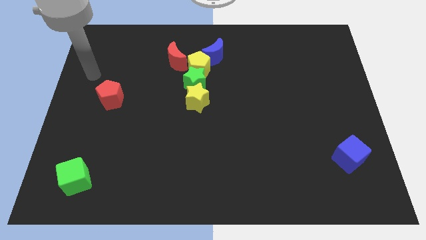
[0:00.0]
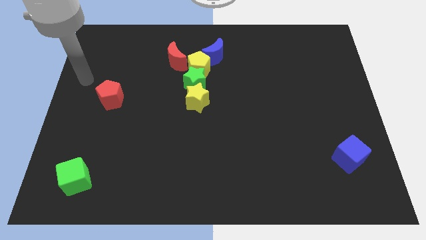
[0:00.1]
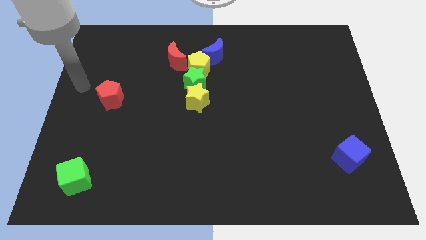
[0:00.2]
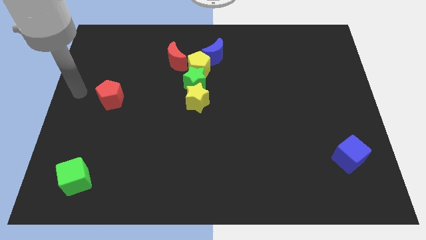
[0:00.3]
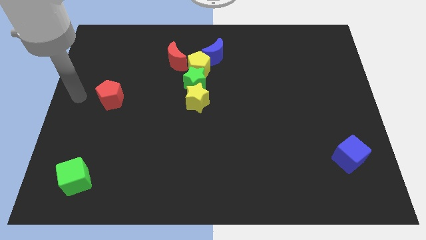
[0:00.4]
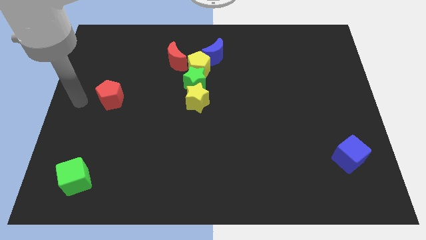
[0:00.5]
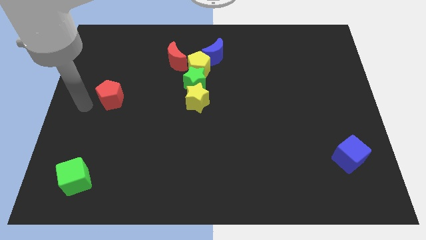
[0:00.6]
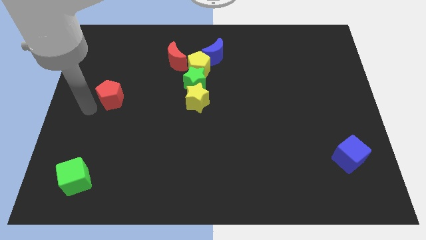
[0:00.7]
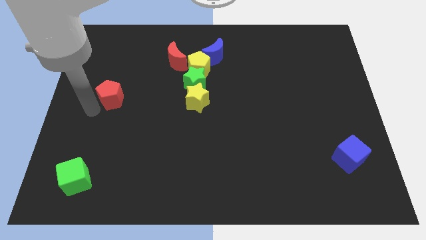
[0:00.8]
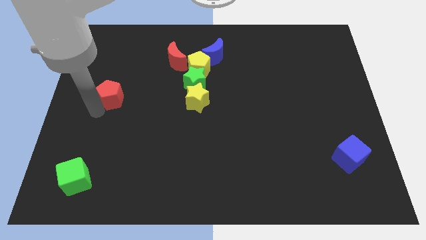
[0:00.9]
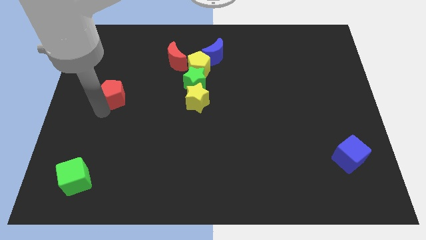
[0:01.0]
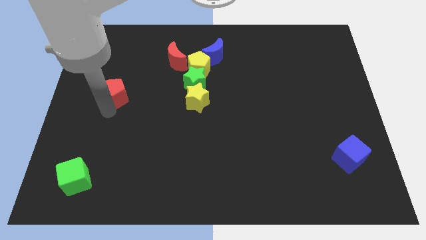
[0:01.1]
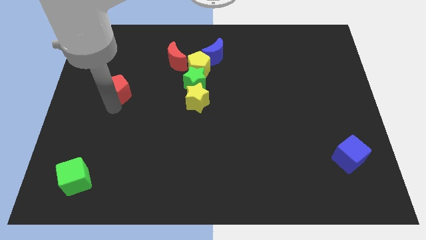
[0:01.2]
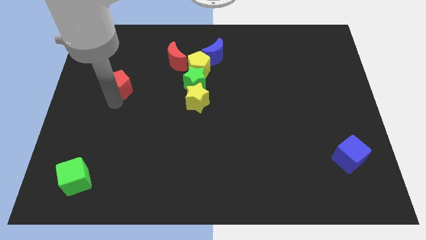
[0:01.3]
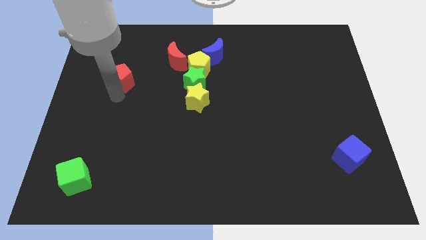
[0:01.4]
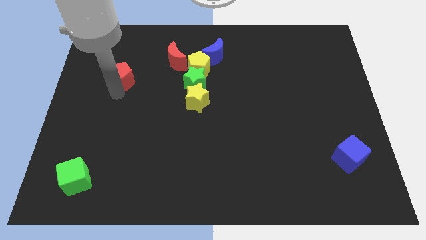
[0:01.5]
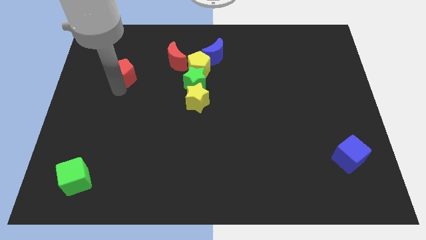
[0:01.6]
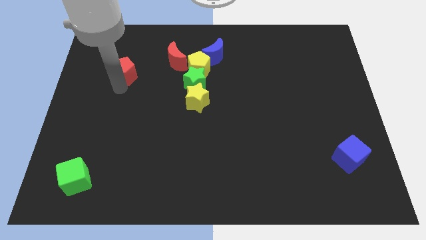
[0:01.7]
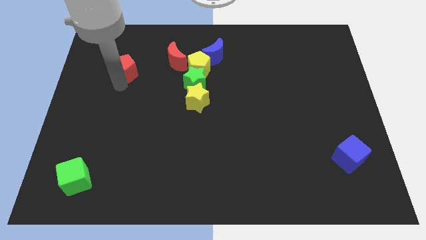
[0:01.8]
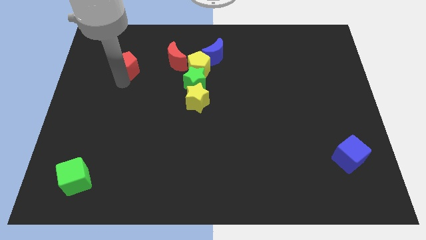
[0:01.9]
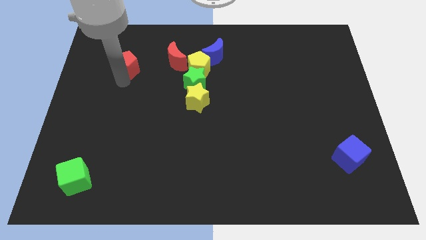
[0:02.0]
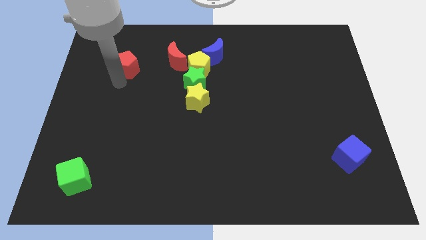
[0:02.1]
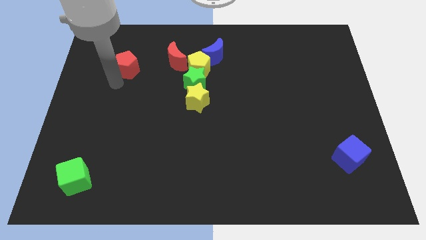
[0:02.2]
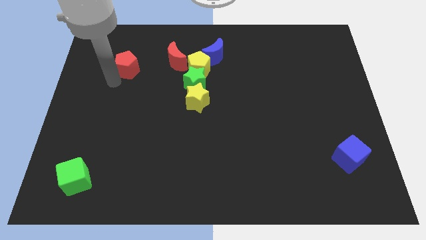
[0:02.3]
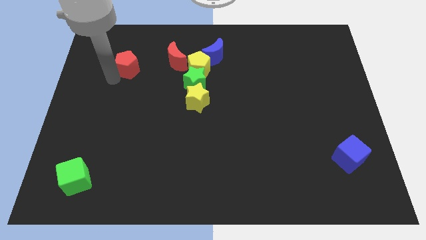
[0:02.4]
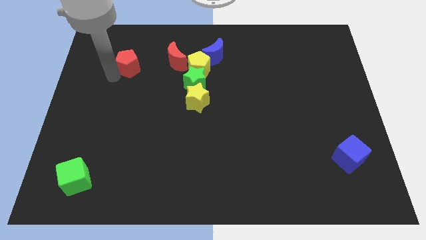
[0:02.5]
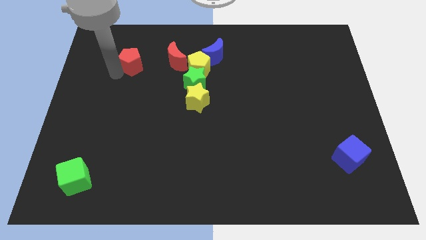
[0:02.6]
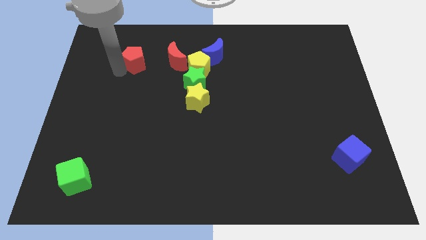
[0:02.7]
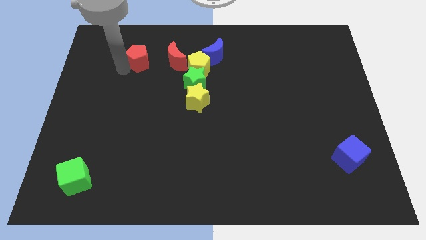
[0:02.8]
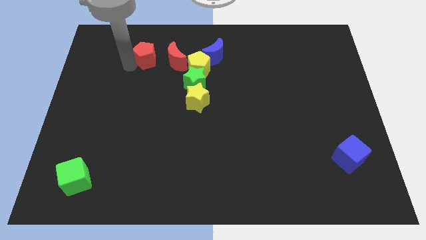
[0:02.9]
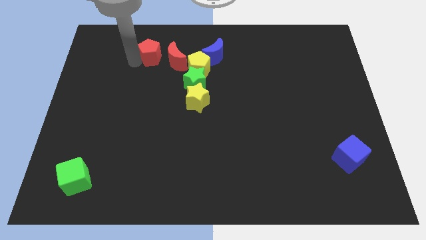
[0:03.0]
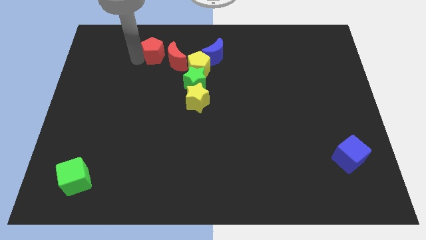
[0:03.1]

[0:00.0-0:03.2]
push red pentagon towards red crescent

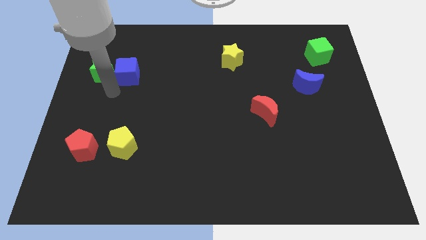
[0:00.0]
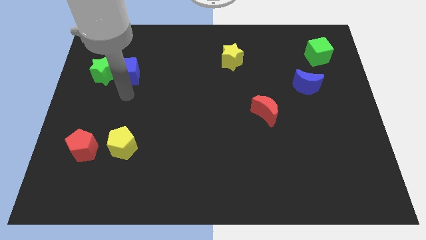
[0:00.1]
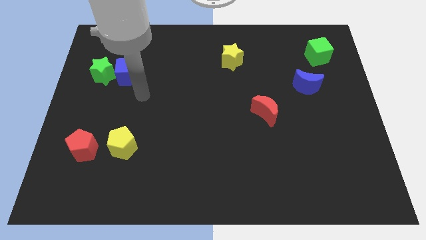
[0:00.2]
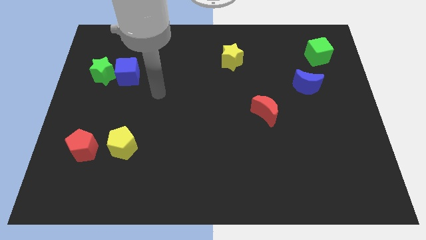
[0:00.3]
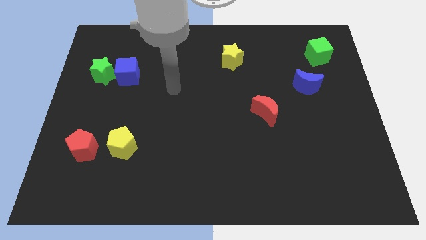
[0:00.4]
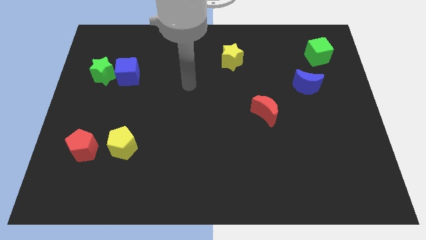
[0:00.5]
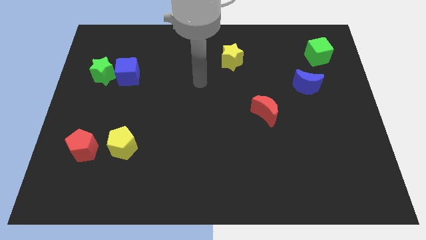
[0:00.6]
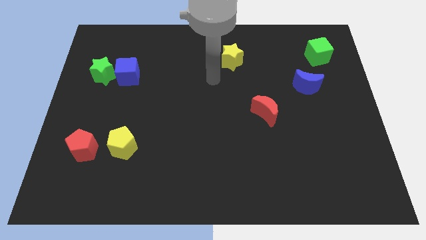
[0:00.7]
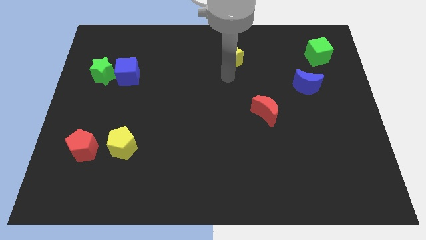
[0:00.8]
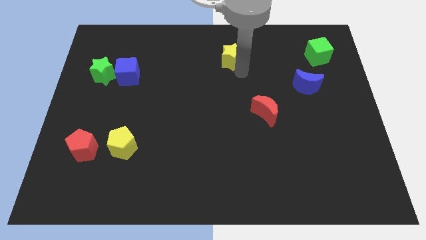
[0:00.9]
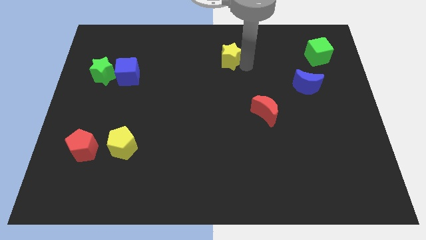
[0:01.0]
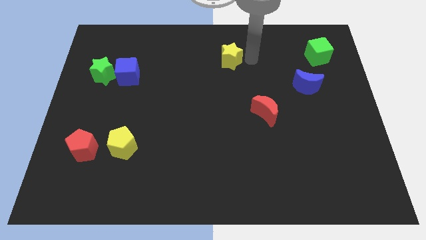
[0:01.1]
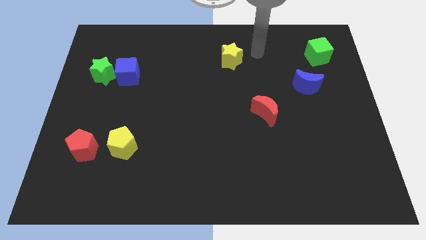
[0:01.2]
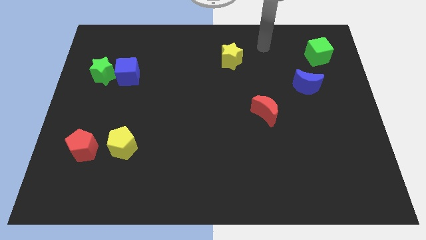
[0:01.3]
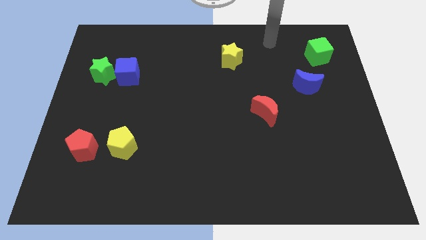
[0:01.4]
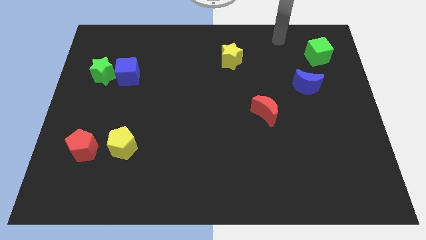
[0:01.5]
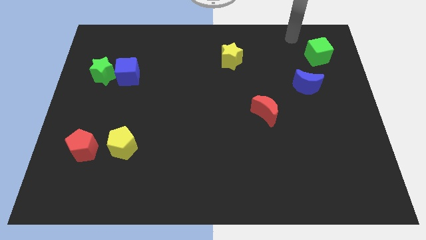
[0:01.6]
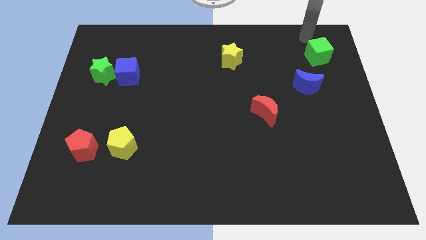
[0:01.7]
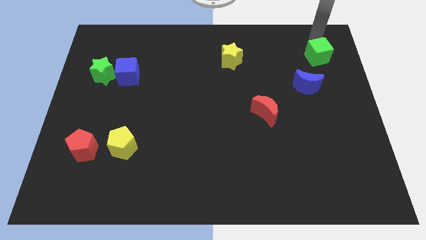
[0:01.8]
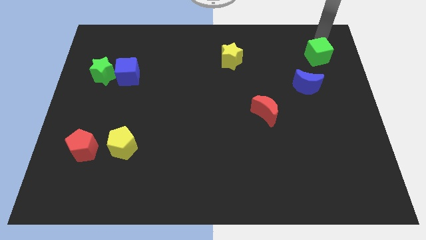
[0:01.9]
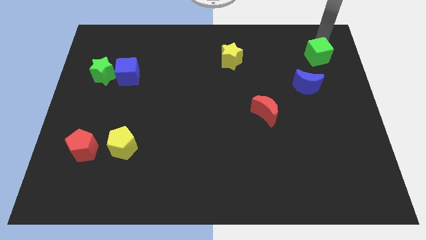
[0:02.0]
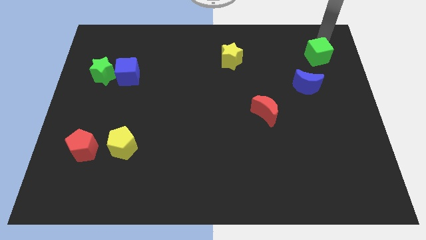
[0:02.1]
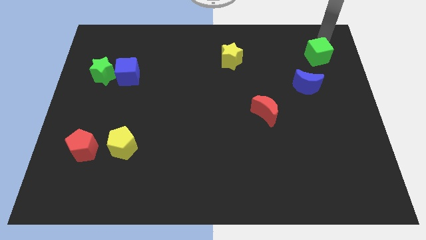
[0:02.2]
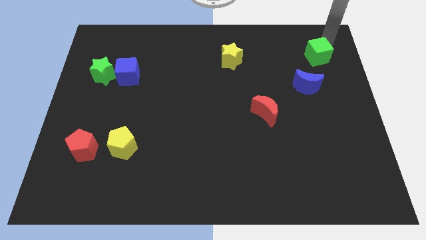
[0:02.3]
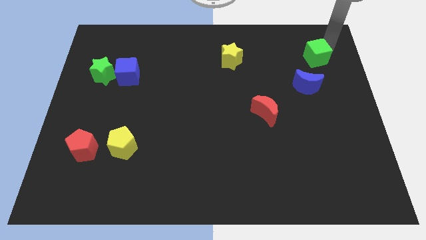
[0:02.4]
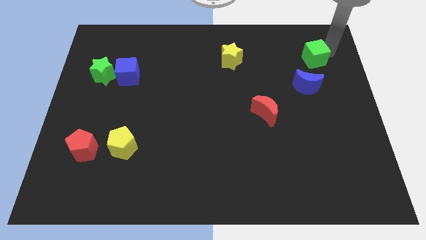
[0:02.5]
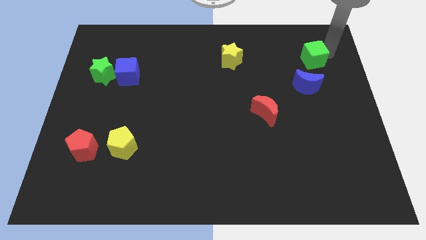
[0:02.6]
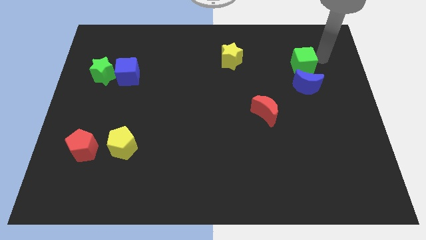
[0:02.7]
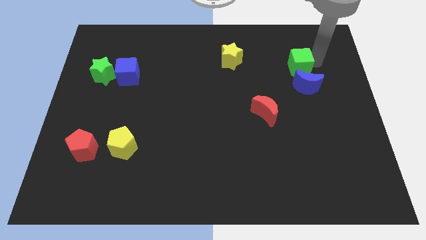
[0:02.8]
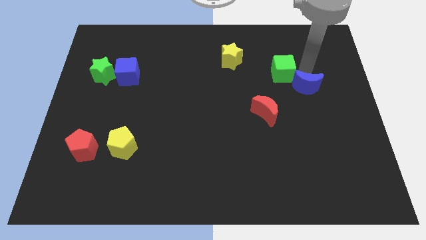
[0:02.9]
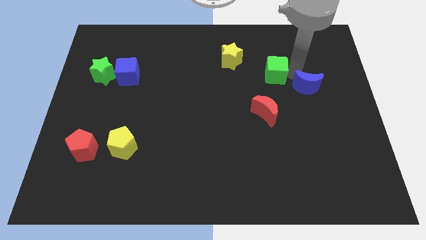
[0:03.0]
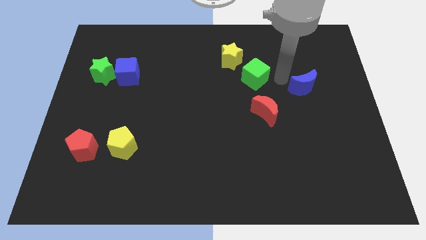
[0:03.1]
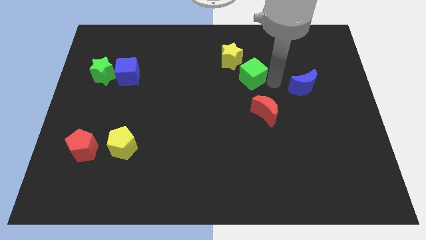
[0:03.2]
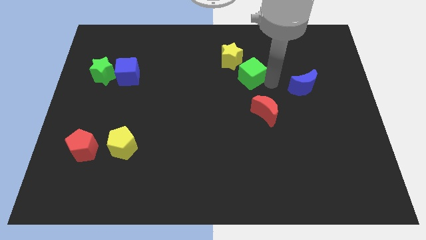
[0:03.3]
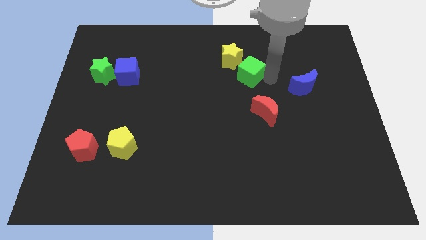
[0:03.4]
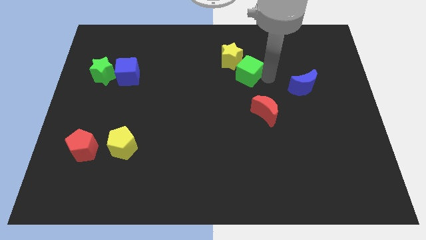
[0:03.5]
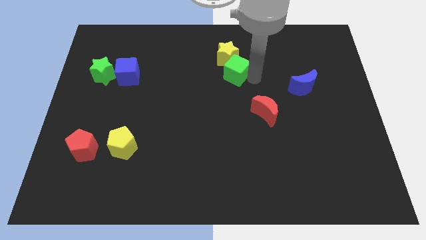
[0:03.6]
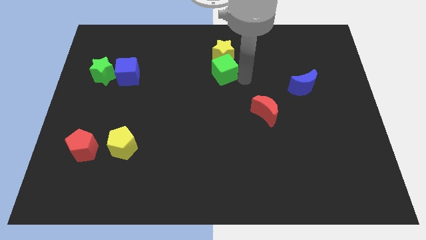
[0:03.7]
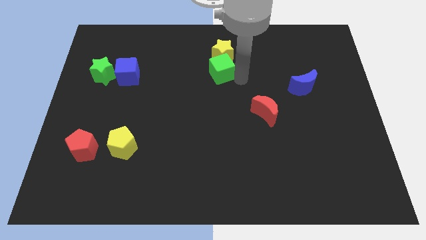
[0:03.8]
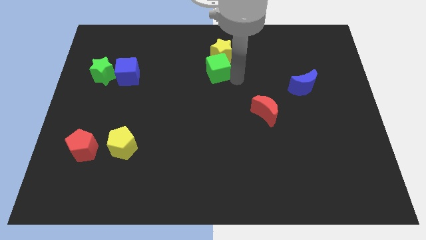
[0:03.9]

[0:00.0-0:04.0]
move the green square down to the yellow star

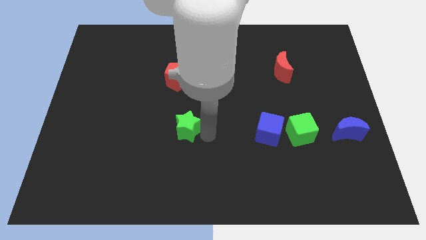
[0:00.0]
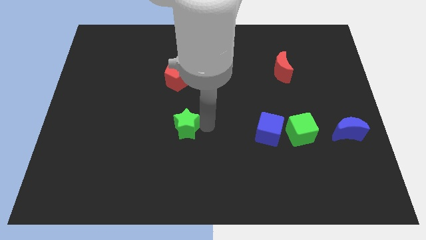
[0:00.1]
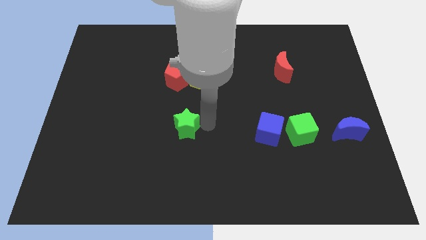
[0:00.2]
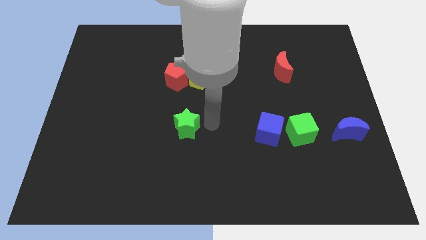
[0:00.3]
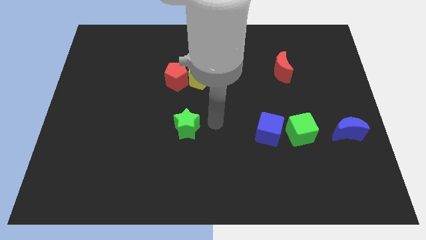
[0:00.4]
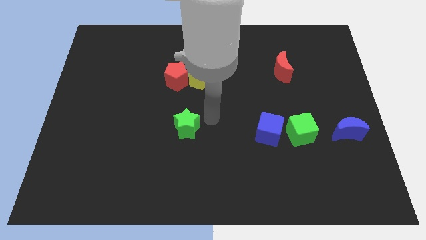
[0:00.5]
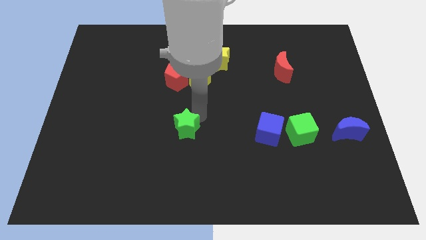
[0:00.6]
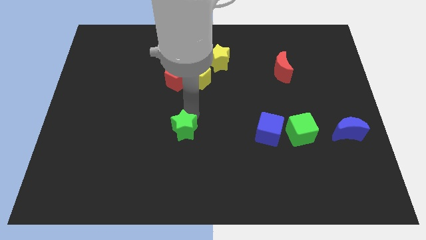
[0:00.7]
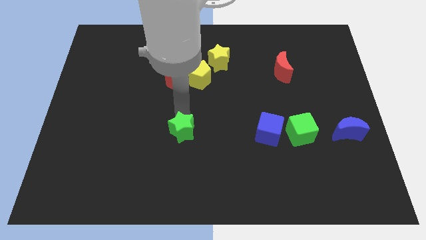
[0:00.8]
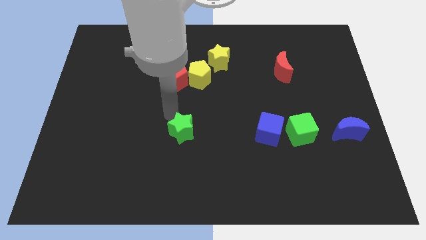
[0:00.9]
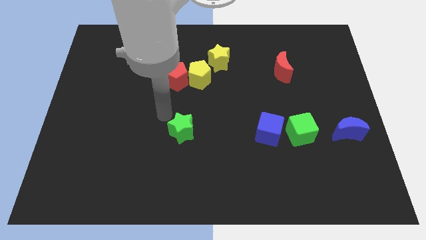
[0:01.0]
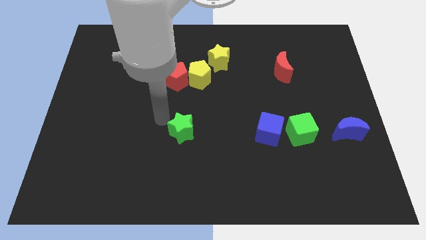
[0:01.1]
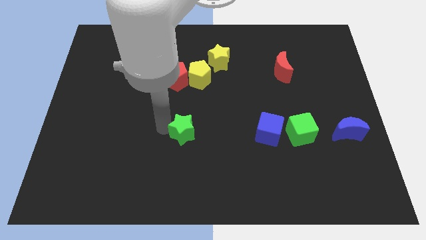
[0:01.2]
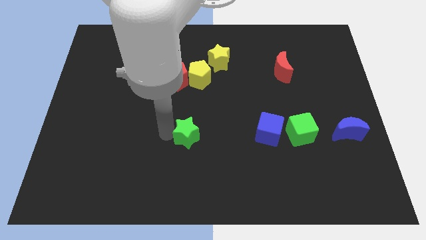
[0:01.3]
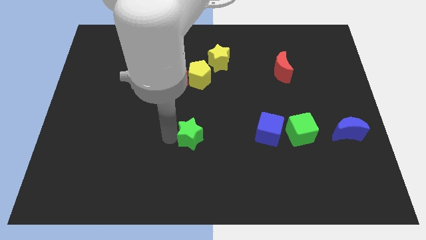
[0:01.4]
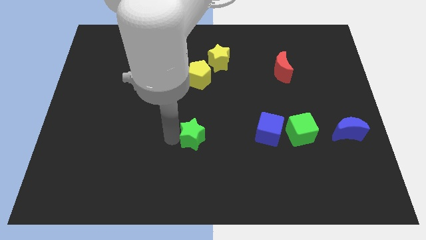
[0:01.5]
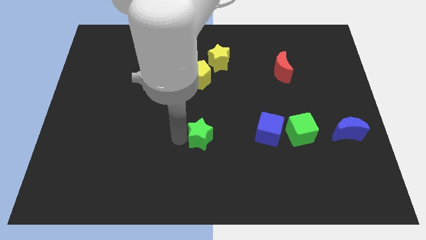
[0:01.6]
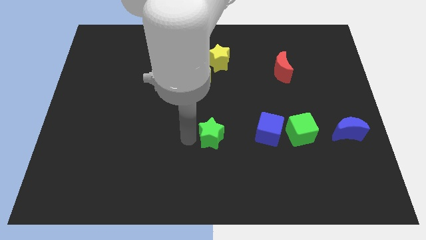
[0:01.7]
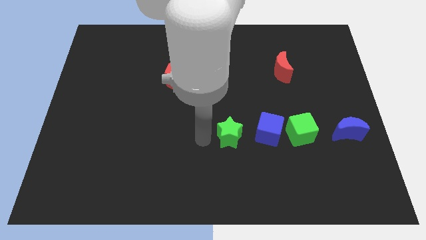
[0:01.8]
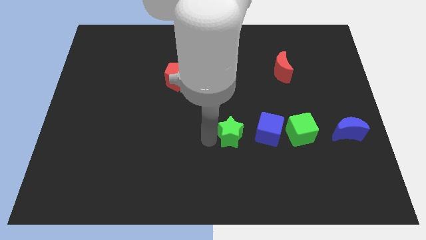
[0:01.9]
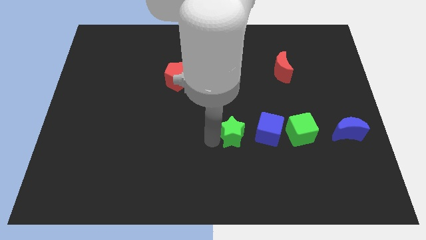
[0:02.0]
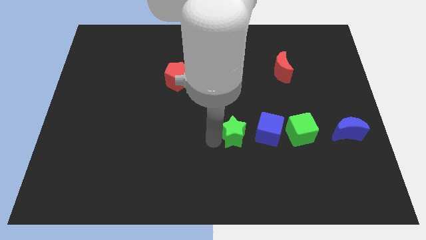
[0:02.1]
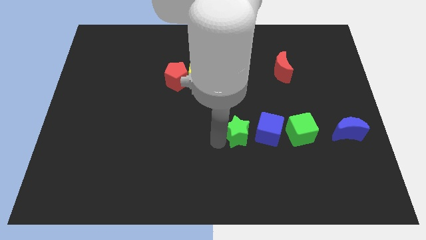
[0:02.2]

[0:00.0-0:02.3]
move the green star to the left side of blue cube
